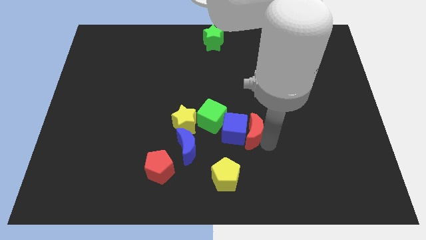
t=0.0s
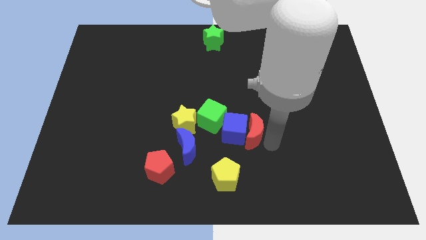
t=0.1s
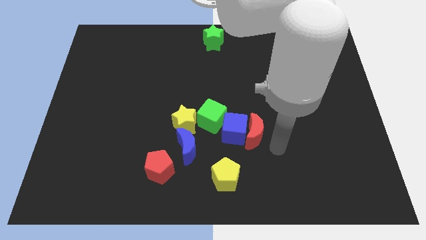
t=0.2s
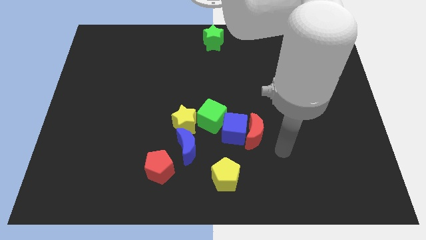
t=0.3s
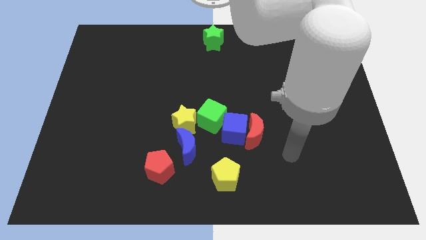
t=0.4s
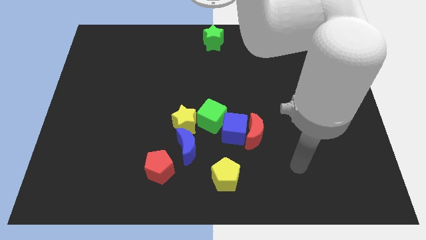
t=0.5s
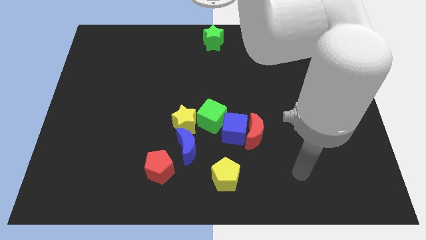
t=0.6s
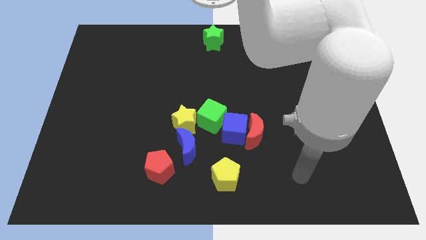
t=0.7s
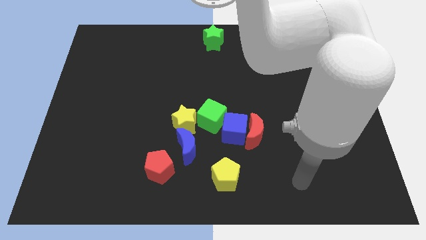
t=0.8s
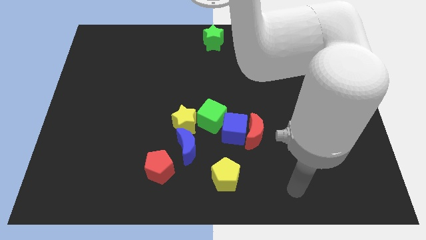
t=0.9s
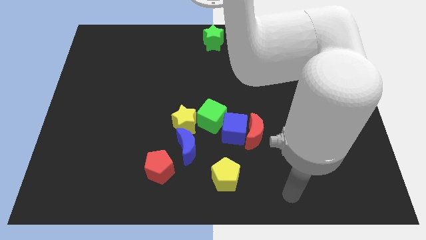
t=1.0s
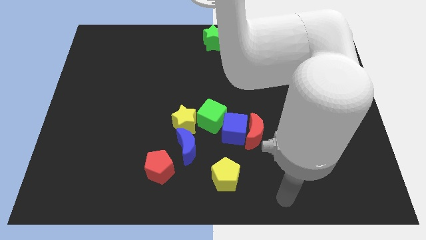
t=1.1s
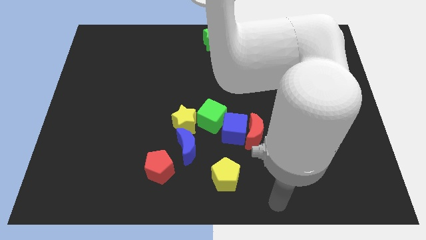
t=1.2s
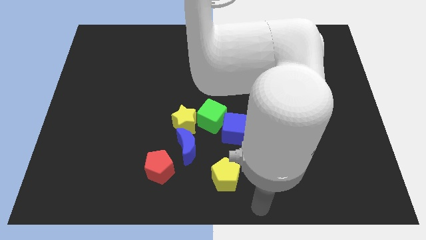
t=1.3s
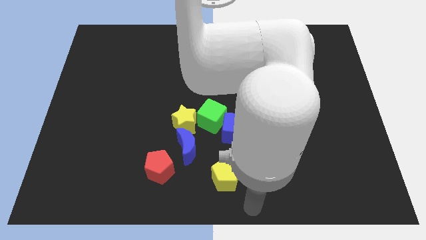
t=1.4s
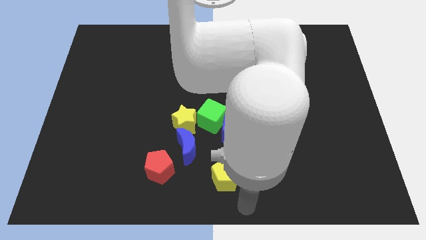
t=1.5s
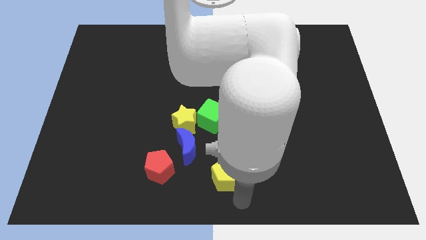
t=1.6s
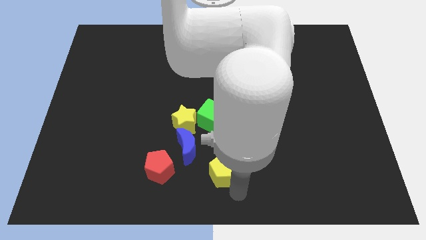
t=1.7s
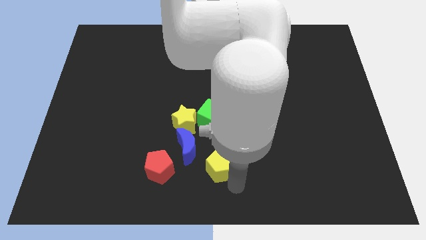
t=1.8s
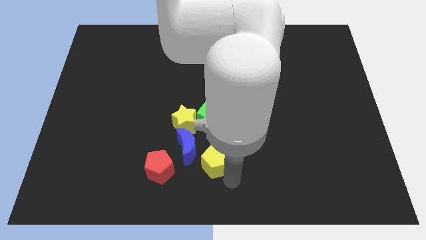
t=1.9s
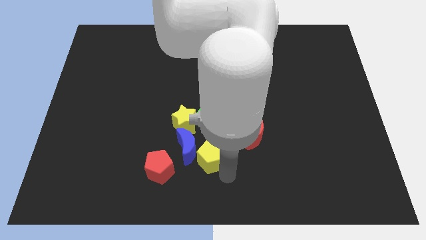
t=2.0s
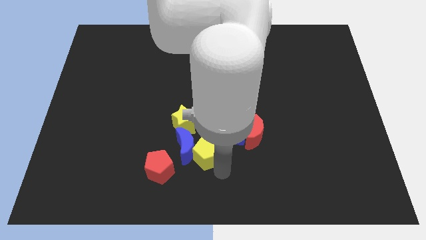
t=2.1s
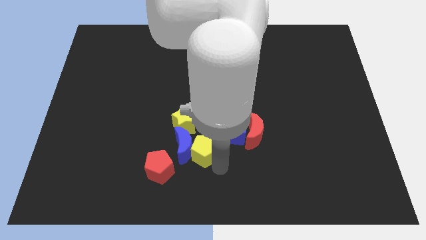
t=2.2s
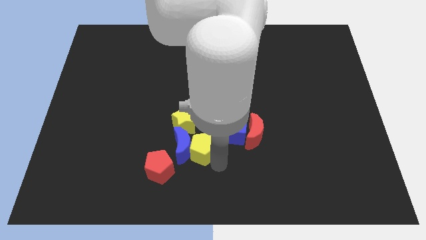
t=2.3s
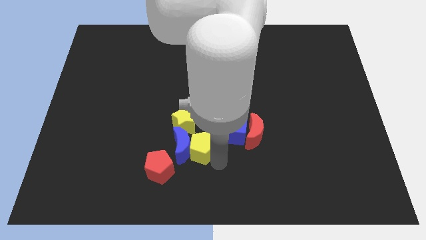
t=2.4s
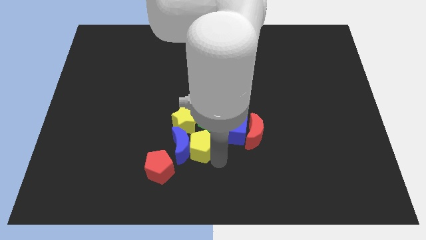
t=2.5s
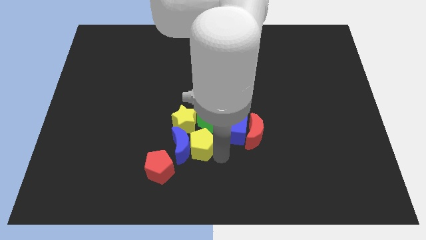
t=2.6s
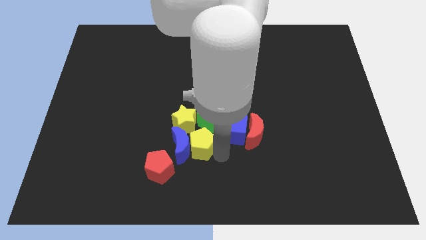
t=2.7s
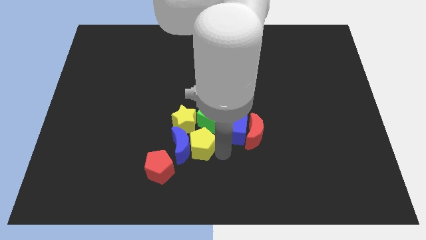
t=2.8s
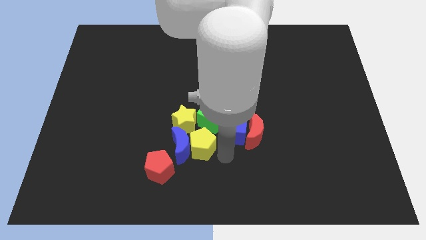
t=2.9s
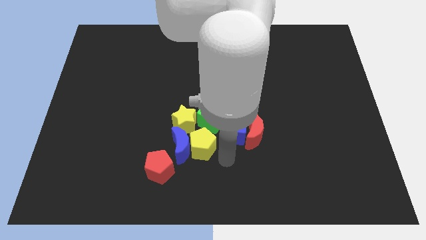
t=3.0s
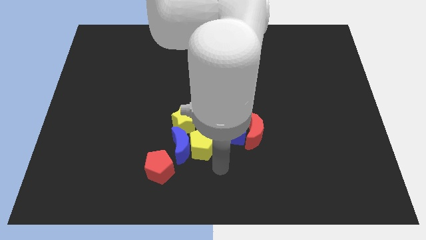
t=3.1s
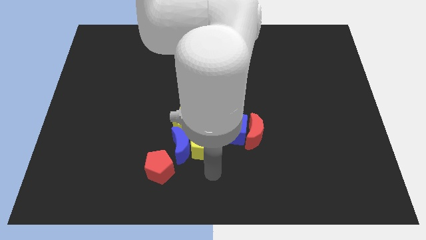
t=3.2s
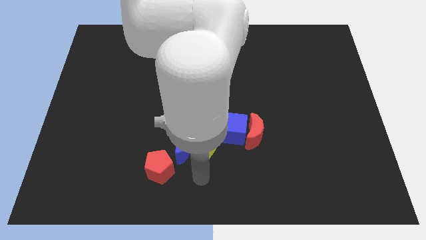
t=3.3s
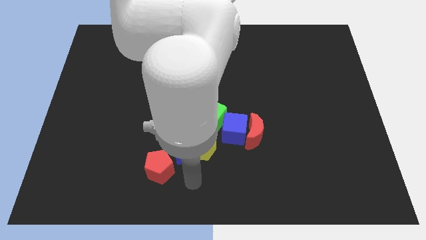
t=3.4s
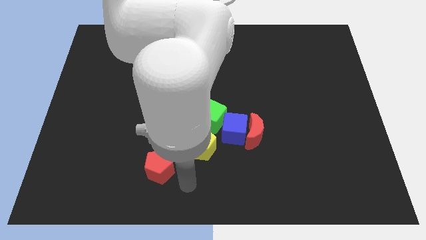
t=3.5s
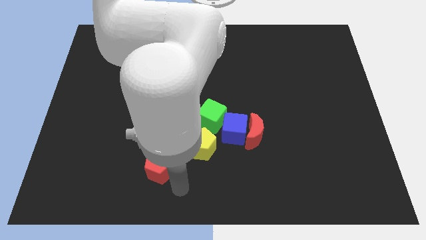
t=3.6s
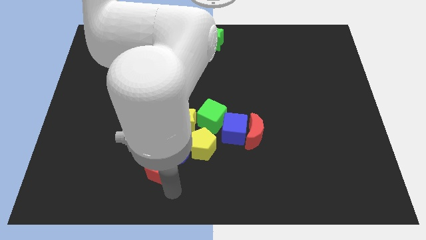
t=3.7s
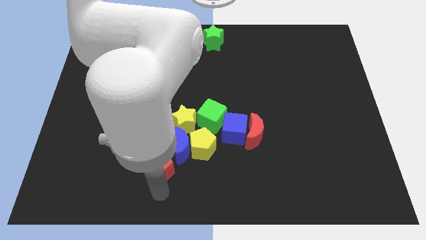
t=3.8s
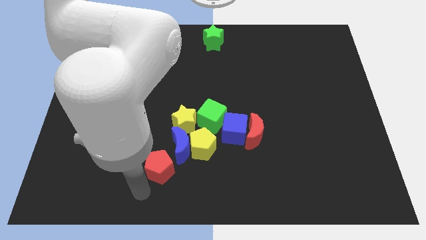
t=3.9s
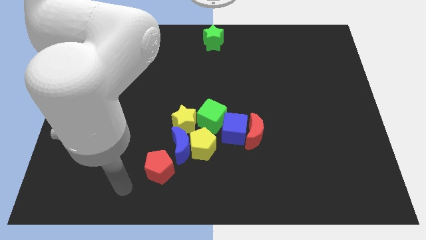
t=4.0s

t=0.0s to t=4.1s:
move your arm away from the red moon

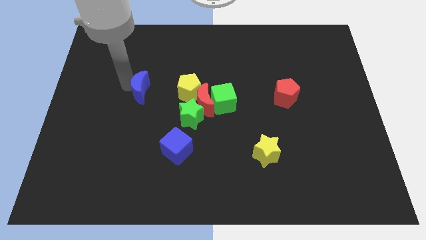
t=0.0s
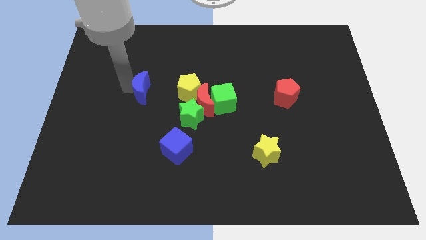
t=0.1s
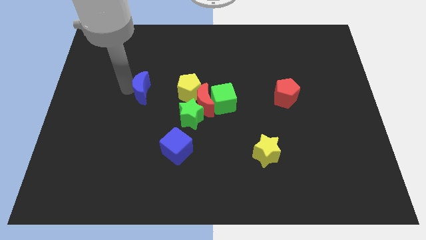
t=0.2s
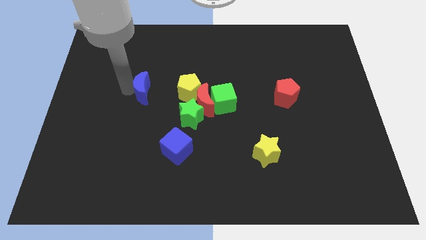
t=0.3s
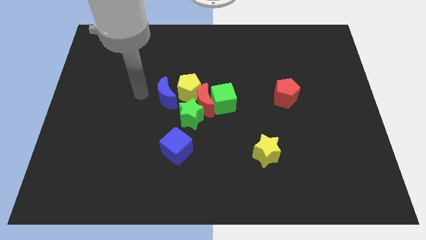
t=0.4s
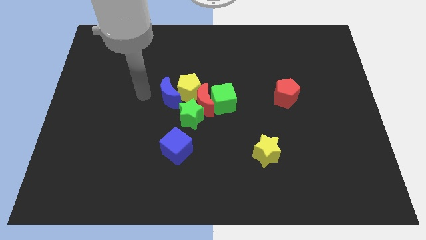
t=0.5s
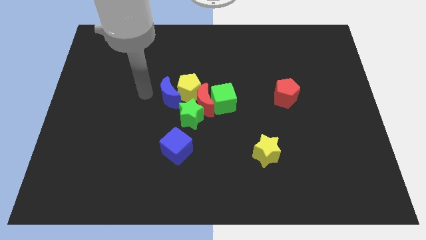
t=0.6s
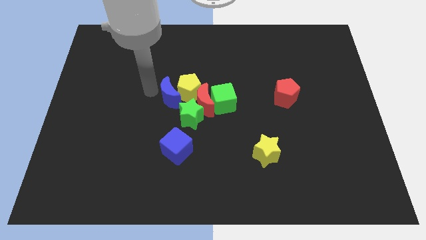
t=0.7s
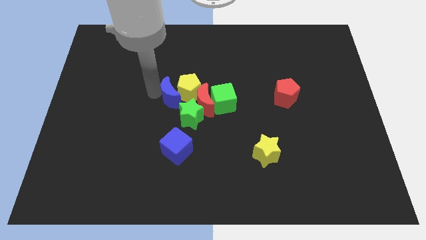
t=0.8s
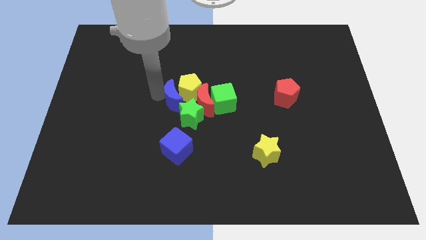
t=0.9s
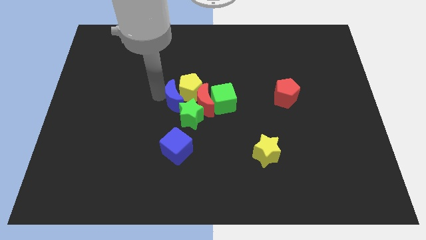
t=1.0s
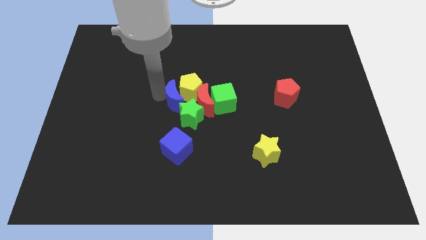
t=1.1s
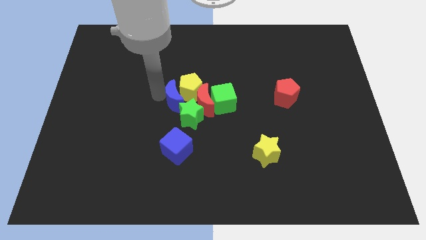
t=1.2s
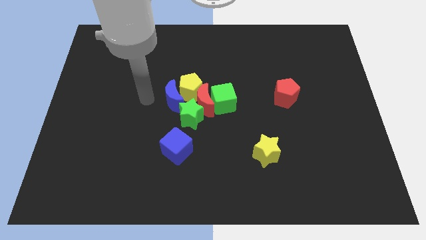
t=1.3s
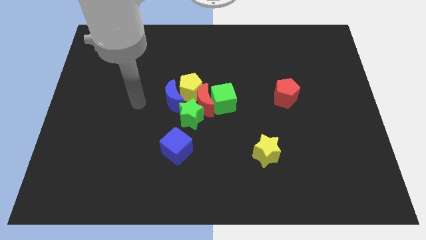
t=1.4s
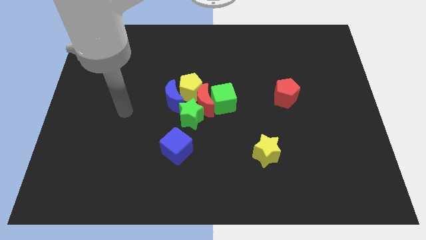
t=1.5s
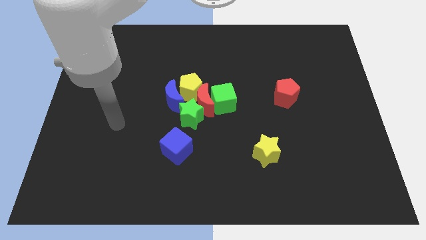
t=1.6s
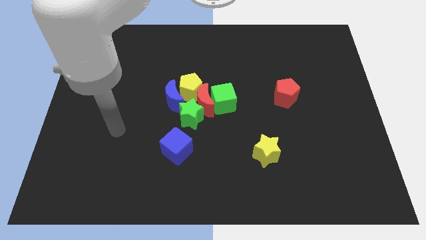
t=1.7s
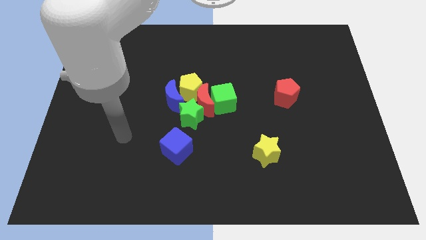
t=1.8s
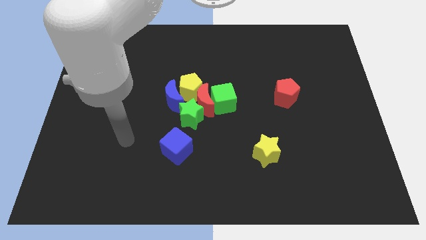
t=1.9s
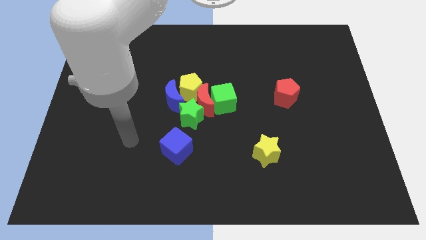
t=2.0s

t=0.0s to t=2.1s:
push blue cube into the yellow pentagon

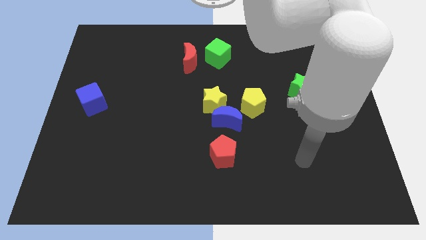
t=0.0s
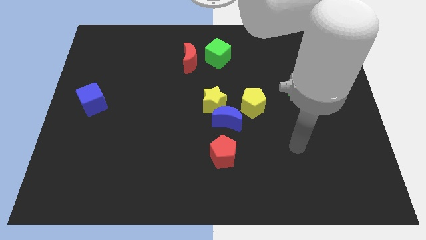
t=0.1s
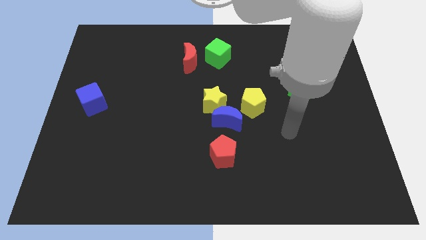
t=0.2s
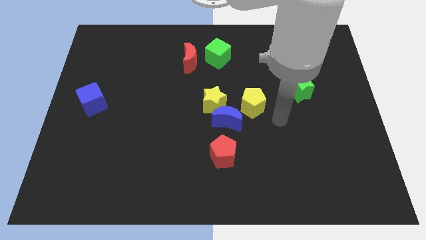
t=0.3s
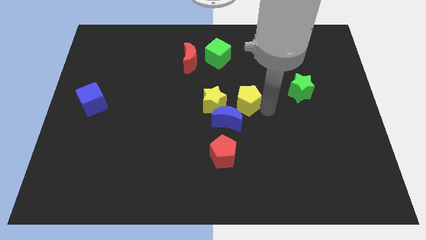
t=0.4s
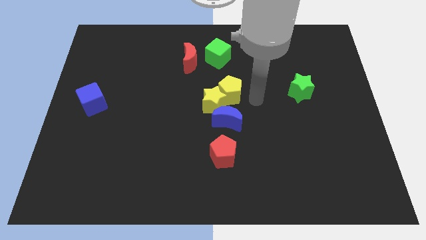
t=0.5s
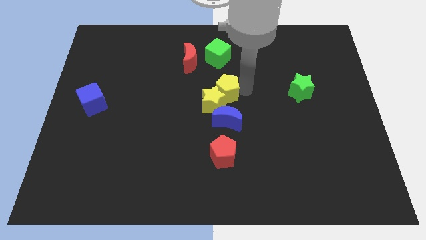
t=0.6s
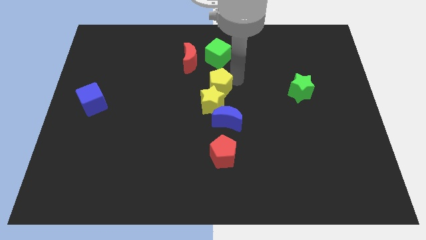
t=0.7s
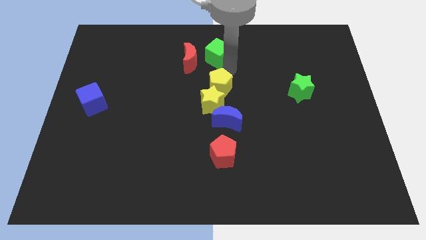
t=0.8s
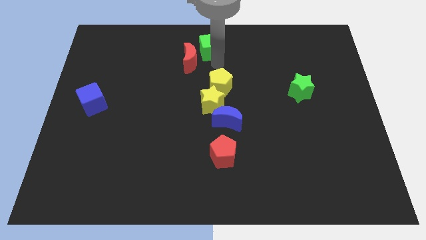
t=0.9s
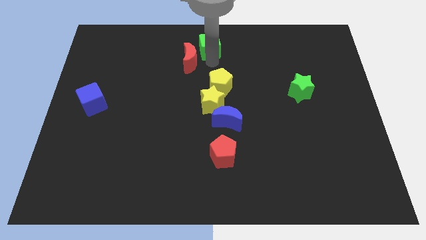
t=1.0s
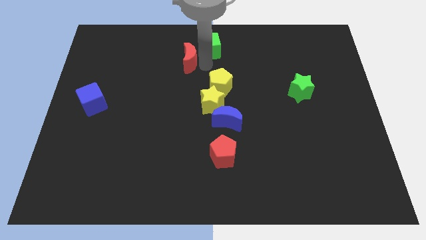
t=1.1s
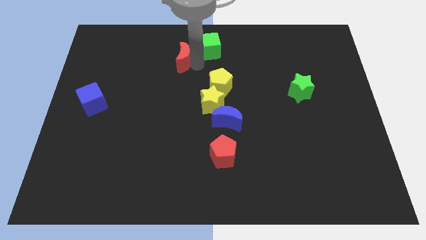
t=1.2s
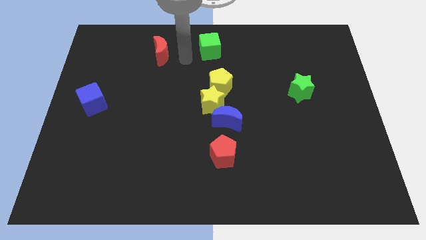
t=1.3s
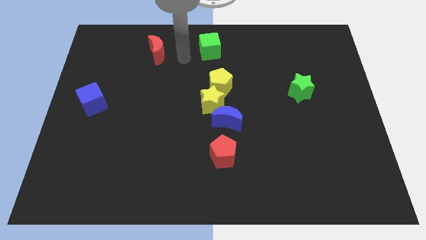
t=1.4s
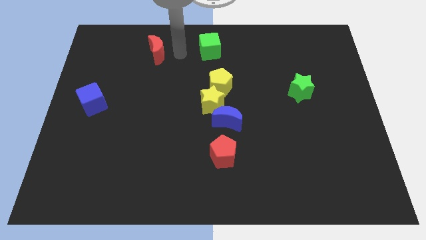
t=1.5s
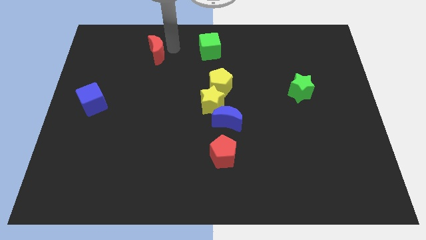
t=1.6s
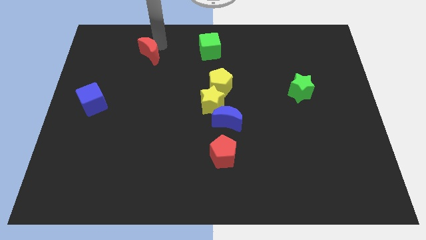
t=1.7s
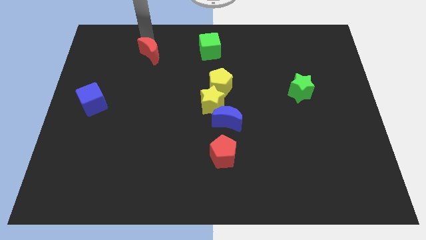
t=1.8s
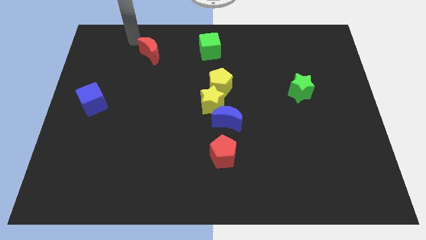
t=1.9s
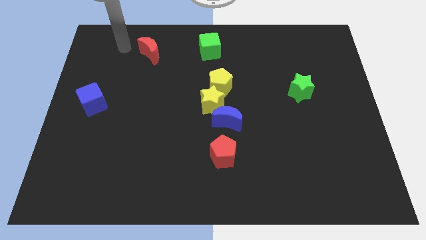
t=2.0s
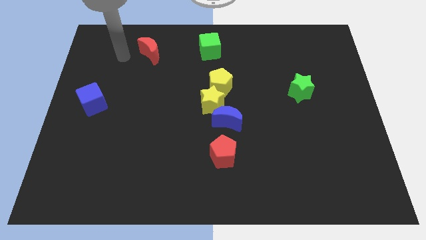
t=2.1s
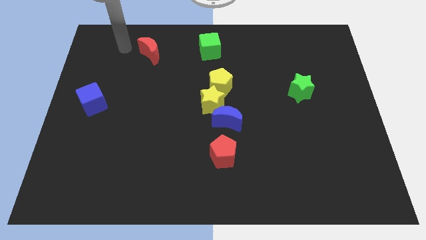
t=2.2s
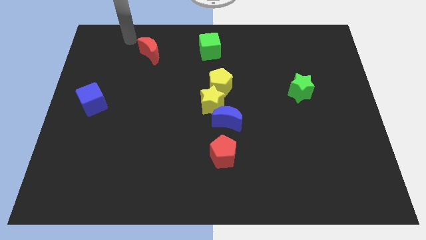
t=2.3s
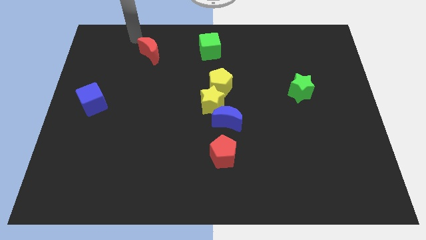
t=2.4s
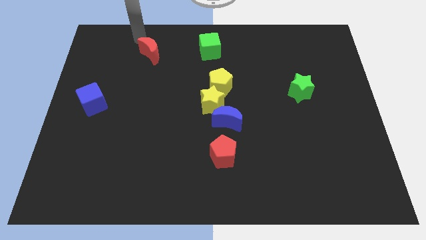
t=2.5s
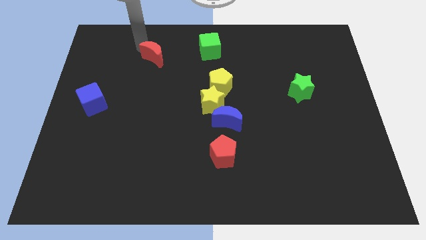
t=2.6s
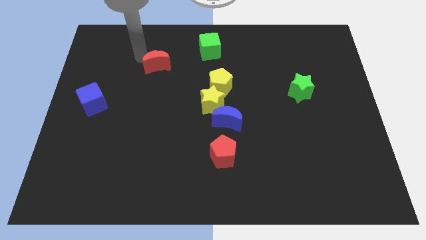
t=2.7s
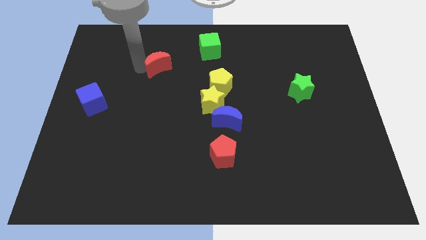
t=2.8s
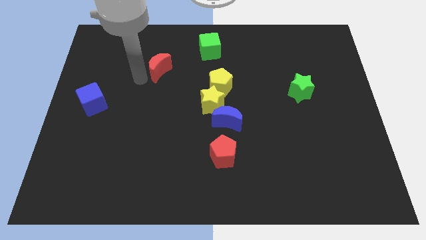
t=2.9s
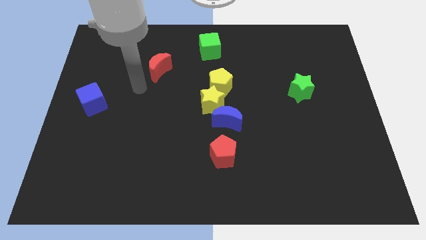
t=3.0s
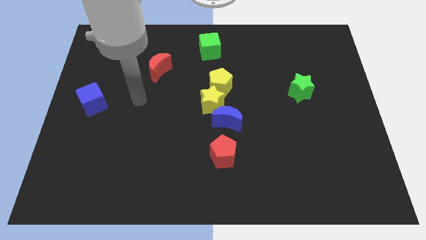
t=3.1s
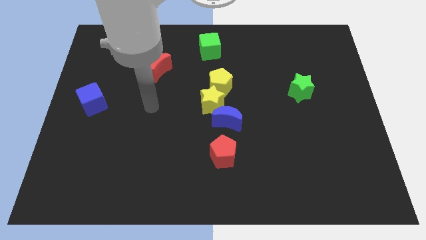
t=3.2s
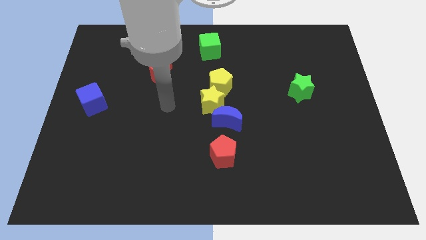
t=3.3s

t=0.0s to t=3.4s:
place the red moon in between the green cube and blue cube
